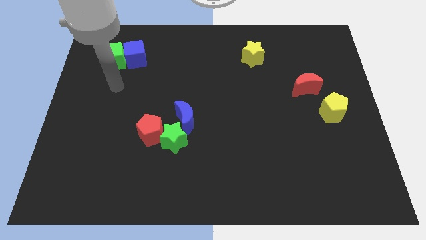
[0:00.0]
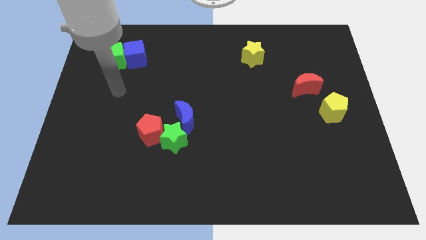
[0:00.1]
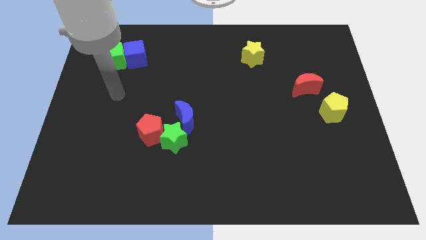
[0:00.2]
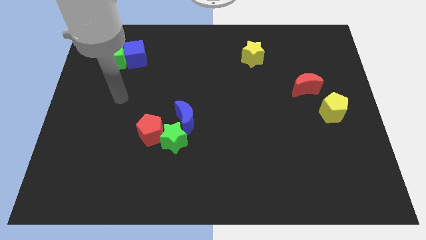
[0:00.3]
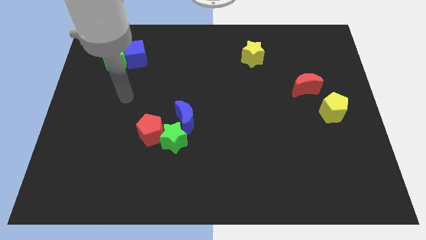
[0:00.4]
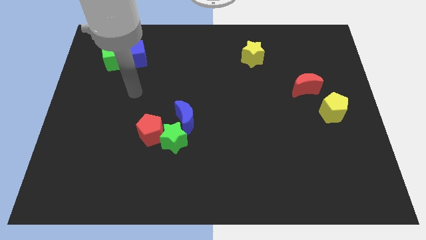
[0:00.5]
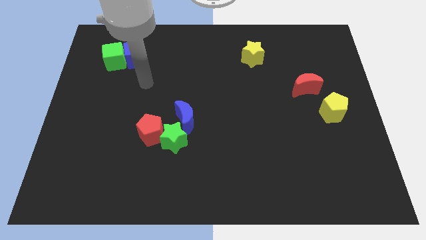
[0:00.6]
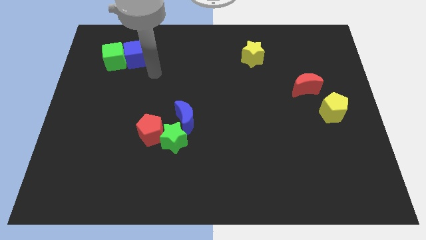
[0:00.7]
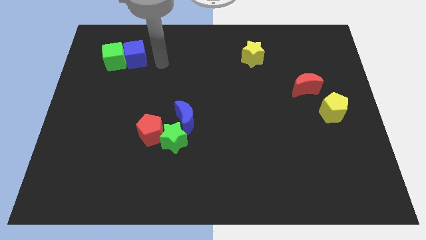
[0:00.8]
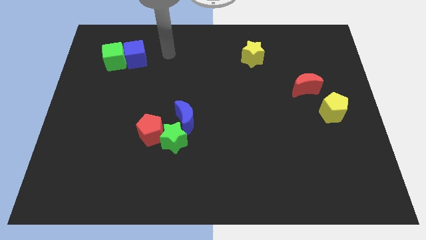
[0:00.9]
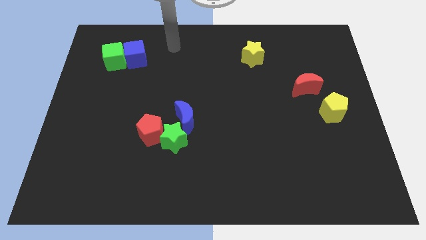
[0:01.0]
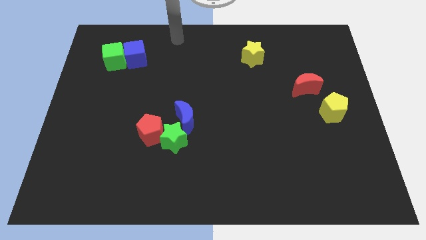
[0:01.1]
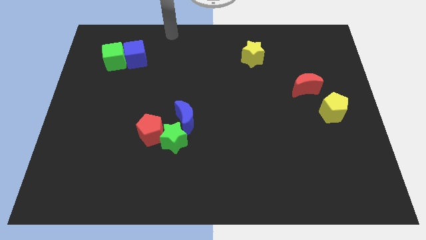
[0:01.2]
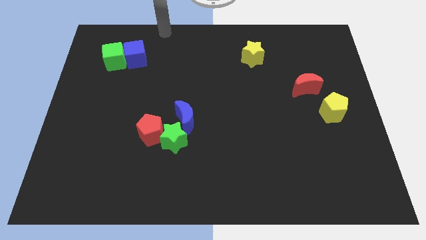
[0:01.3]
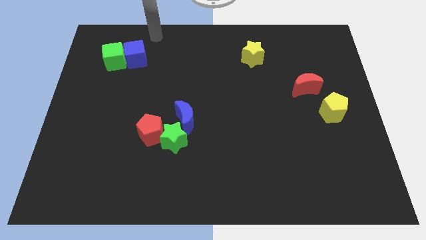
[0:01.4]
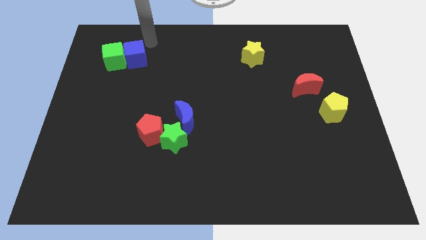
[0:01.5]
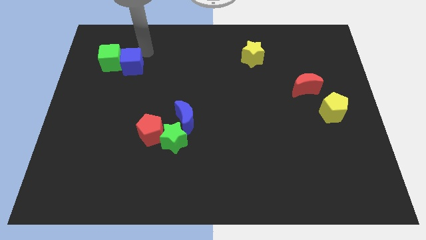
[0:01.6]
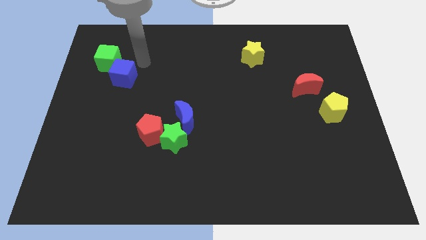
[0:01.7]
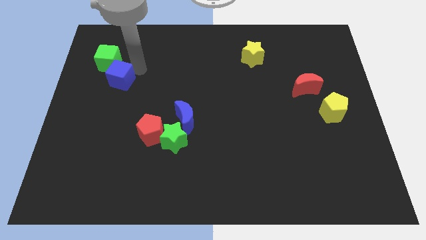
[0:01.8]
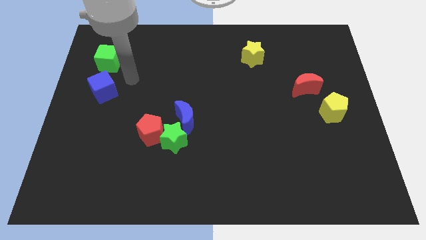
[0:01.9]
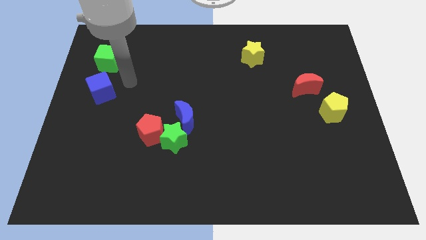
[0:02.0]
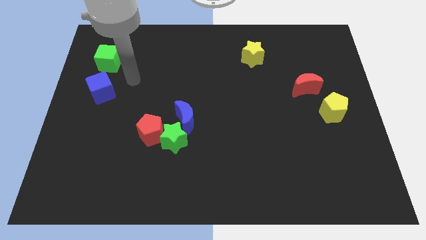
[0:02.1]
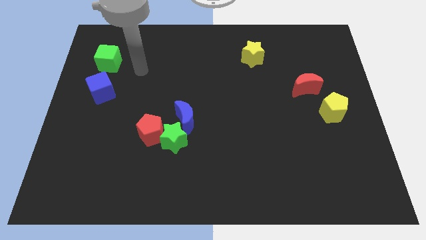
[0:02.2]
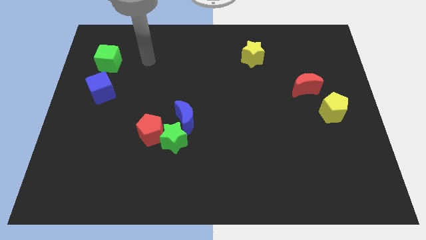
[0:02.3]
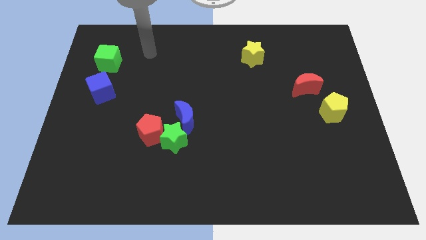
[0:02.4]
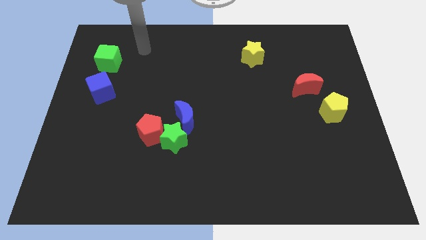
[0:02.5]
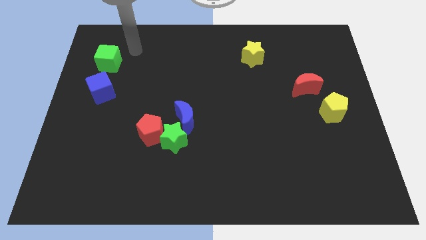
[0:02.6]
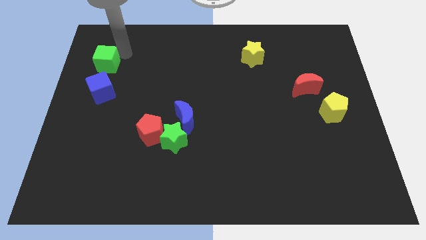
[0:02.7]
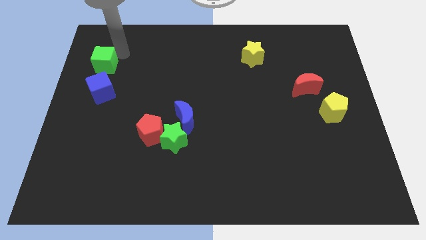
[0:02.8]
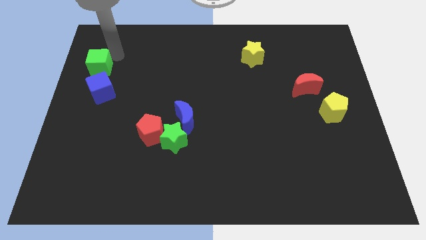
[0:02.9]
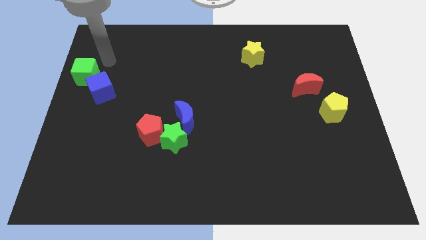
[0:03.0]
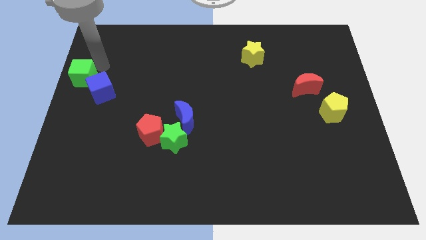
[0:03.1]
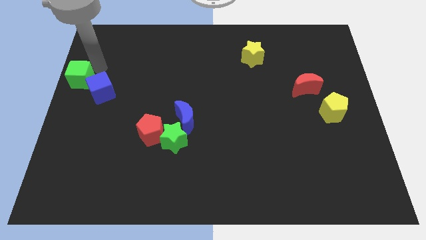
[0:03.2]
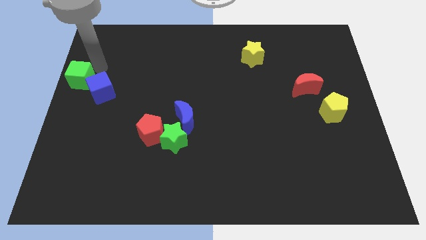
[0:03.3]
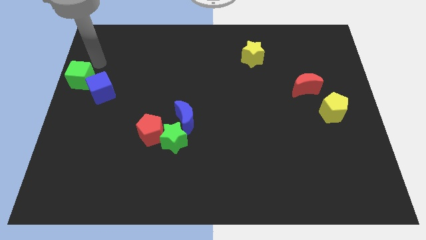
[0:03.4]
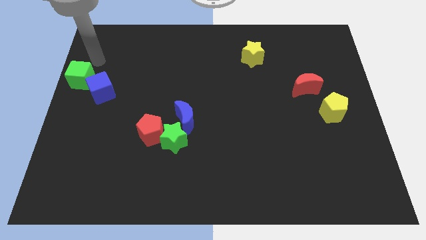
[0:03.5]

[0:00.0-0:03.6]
move the green and blue cubes to the left side of the board

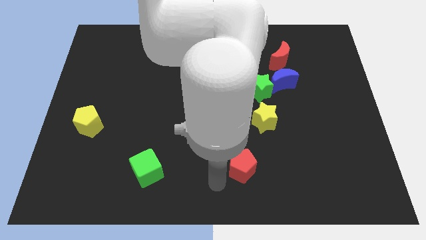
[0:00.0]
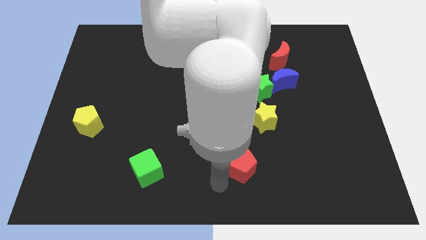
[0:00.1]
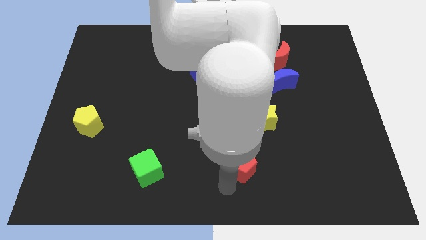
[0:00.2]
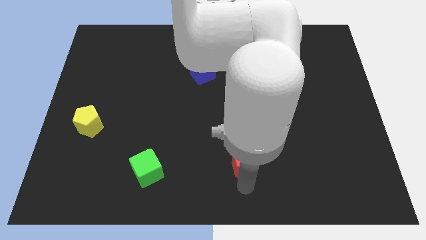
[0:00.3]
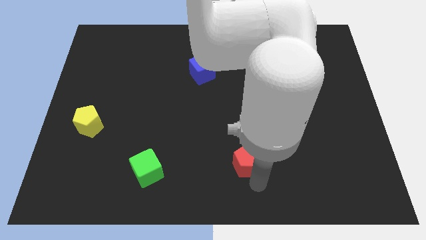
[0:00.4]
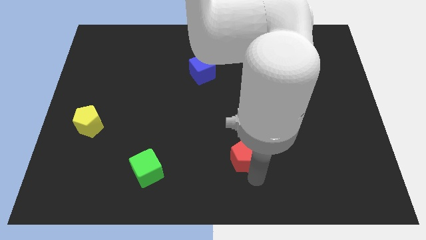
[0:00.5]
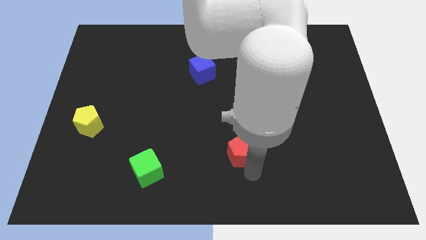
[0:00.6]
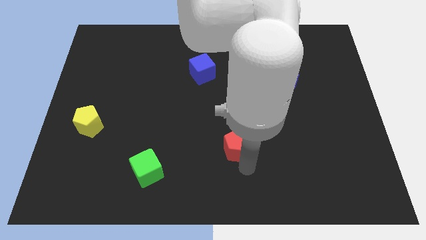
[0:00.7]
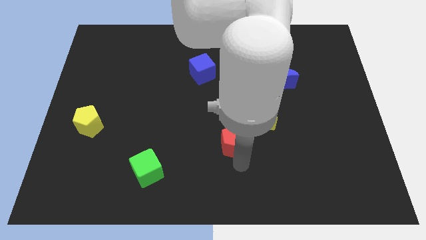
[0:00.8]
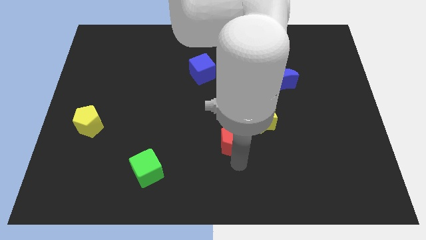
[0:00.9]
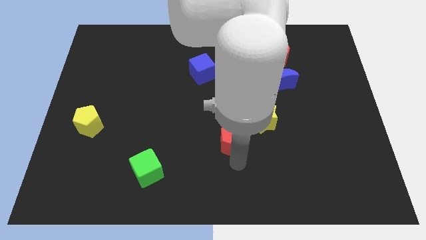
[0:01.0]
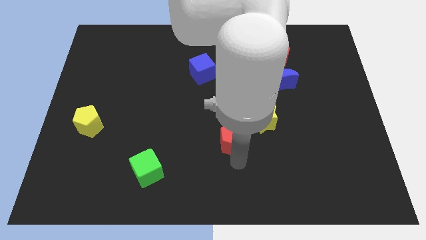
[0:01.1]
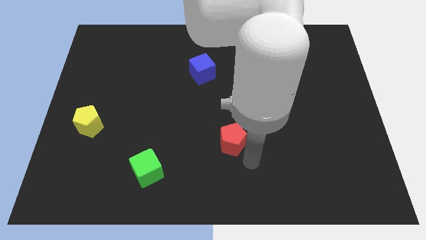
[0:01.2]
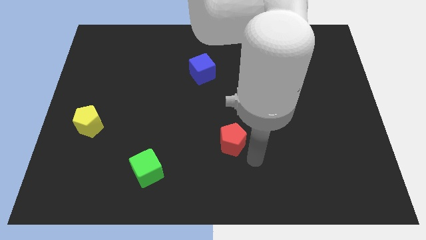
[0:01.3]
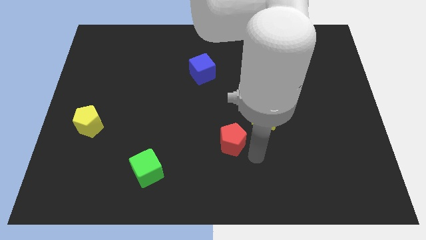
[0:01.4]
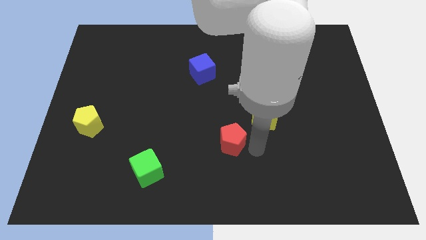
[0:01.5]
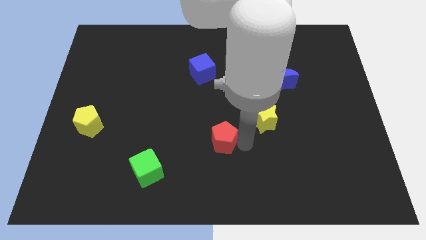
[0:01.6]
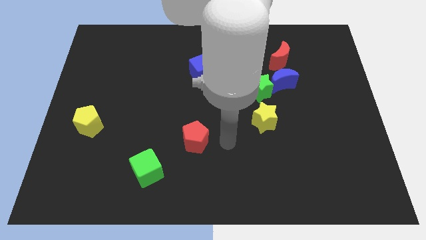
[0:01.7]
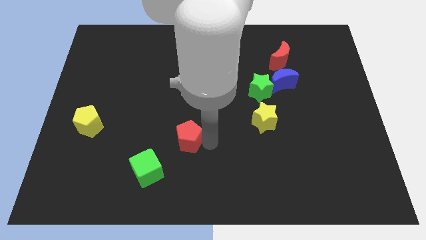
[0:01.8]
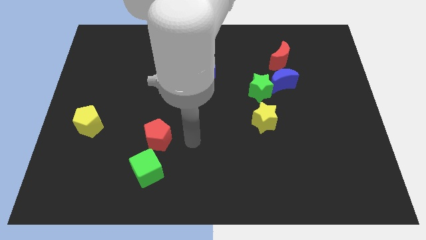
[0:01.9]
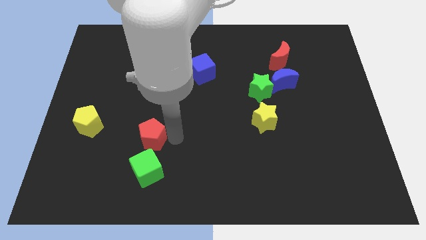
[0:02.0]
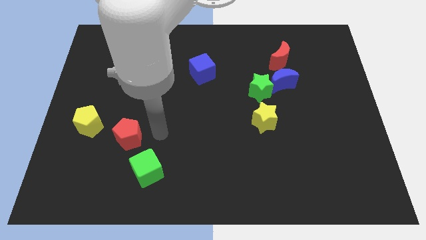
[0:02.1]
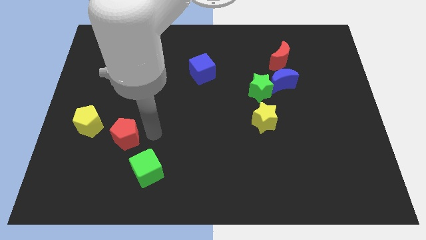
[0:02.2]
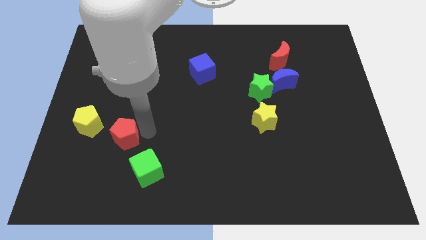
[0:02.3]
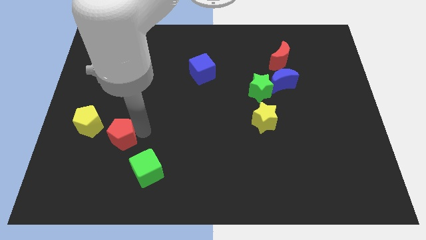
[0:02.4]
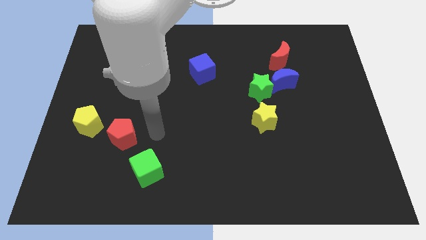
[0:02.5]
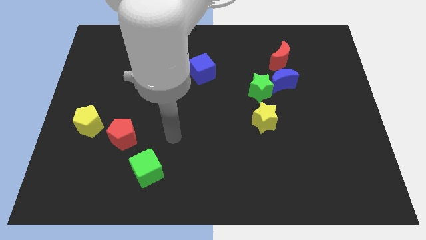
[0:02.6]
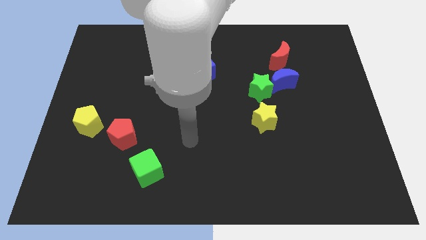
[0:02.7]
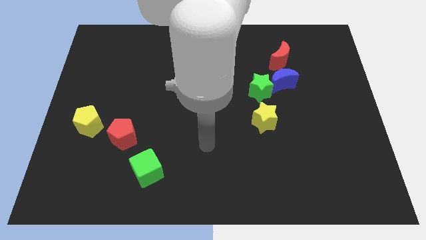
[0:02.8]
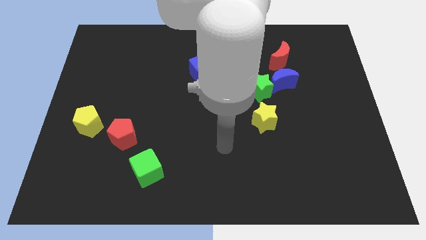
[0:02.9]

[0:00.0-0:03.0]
move the red pentagon to the horizontal left of the yellow star

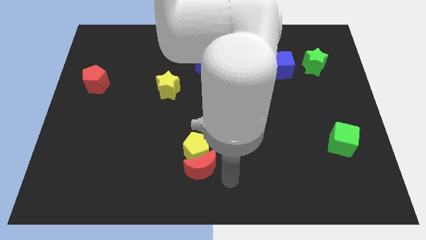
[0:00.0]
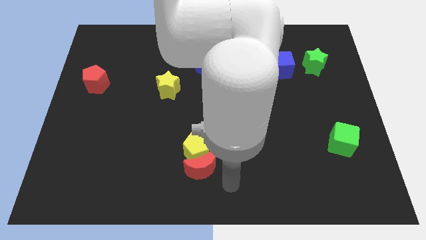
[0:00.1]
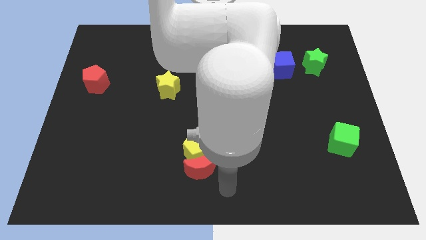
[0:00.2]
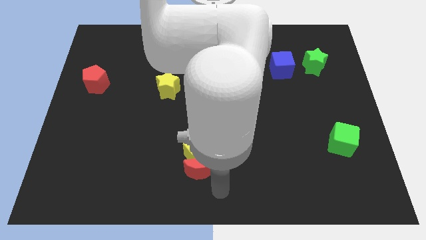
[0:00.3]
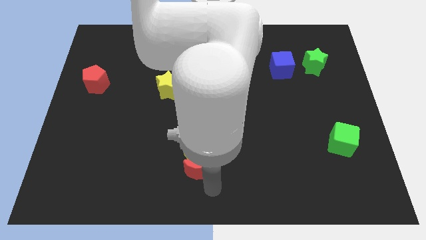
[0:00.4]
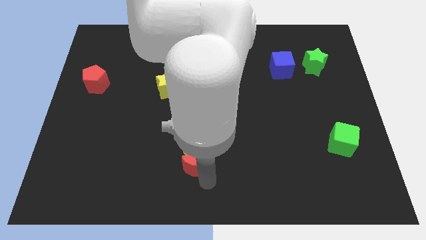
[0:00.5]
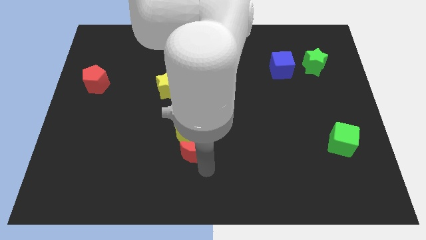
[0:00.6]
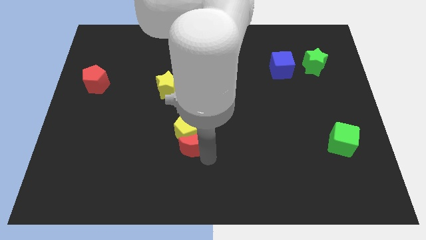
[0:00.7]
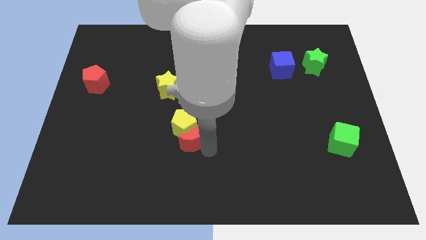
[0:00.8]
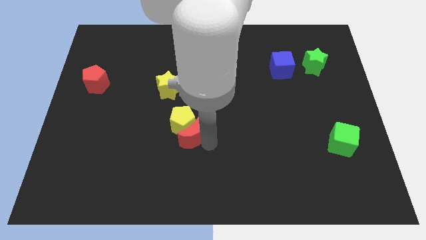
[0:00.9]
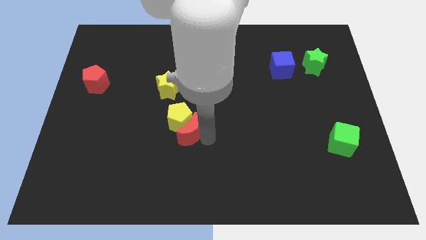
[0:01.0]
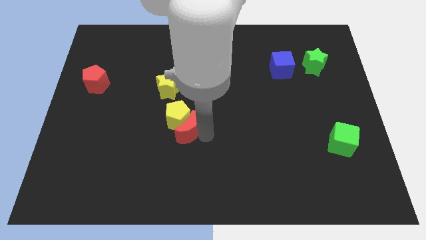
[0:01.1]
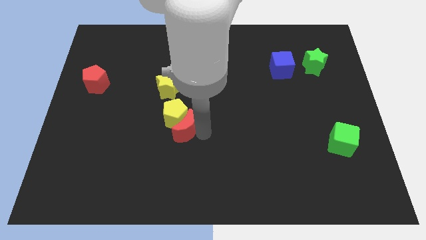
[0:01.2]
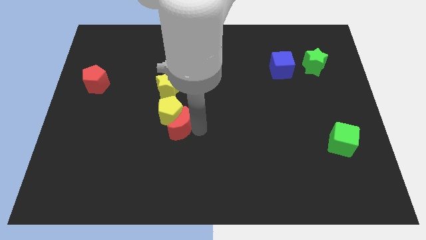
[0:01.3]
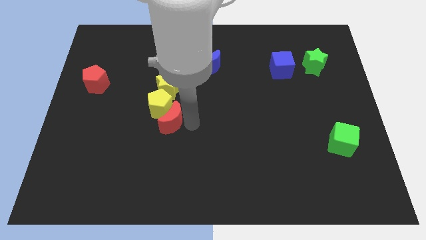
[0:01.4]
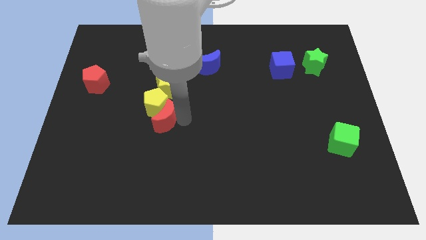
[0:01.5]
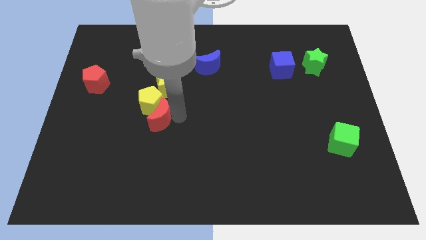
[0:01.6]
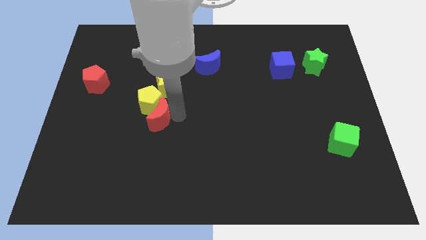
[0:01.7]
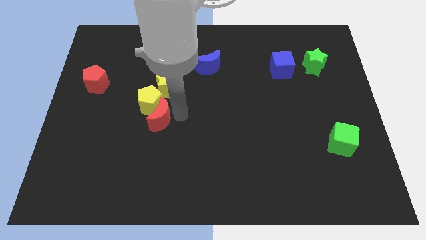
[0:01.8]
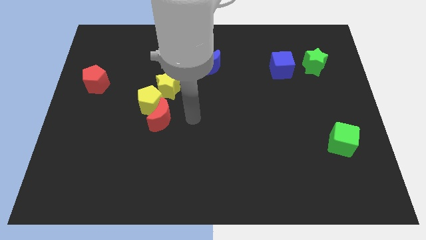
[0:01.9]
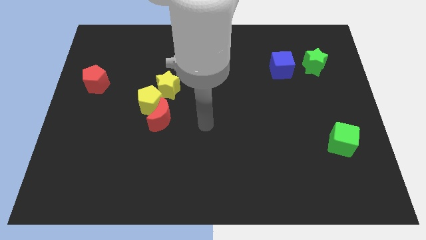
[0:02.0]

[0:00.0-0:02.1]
move yellow pentagon and red moon to the bottom of yellow star

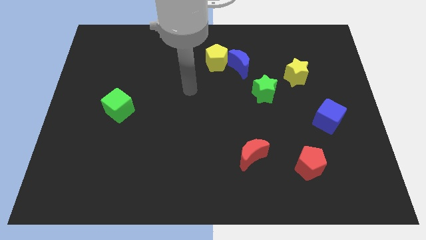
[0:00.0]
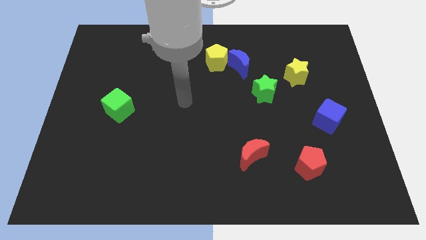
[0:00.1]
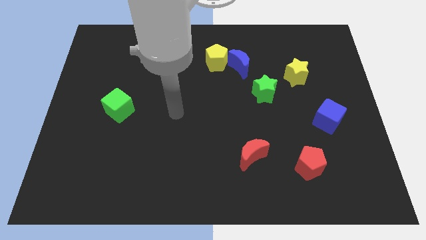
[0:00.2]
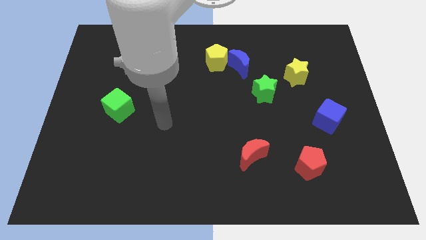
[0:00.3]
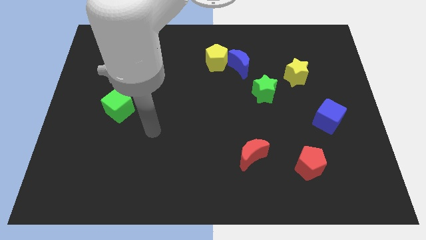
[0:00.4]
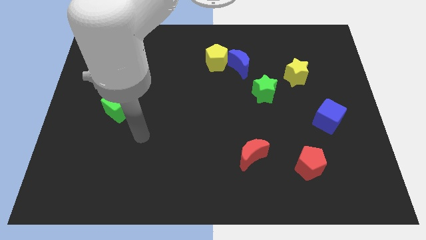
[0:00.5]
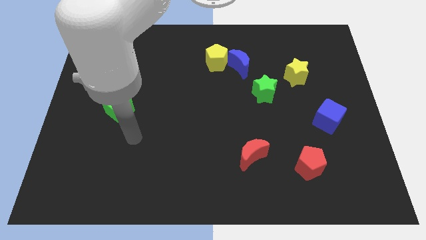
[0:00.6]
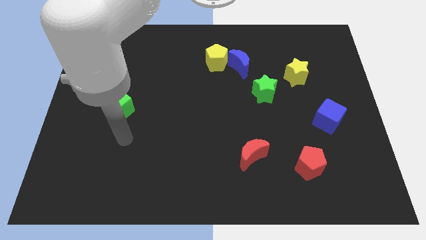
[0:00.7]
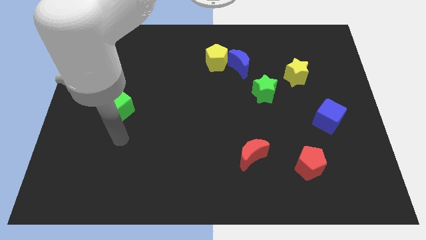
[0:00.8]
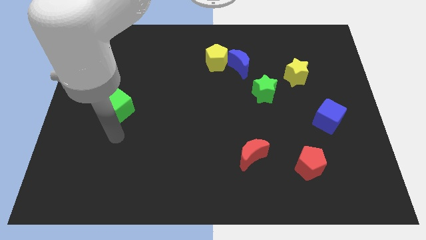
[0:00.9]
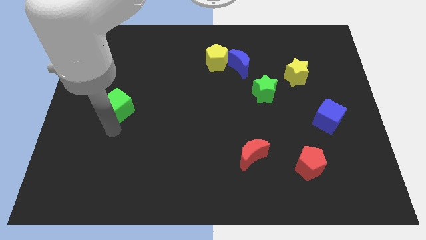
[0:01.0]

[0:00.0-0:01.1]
move your arm to the bottom of the green cube
